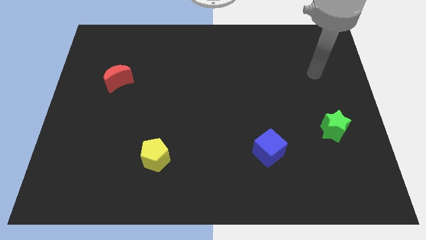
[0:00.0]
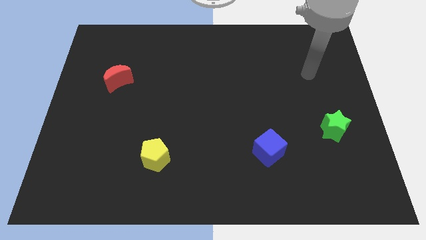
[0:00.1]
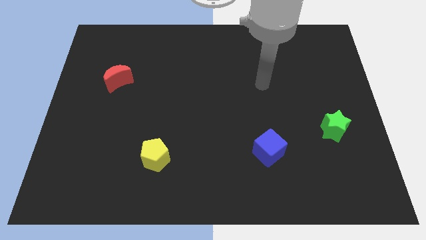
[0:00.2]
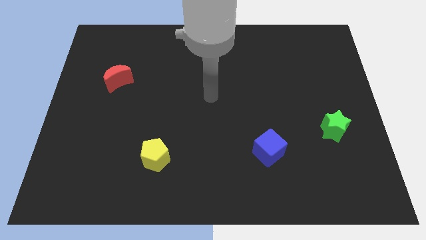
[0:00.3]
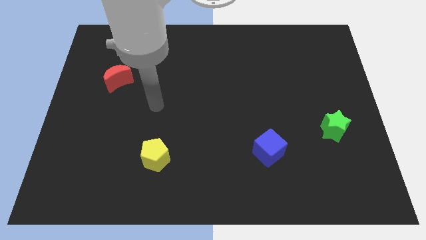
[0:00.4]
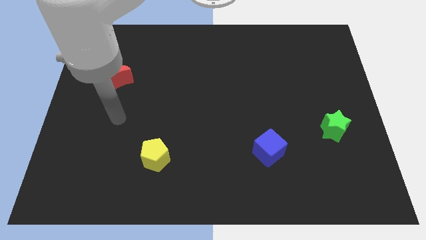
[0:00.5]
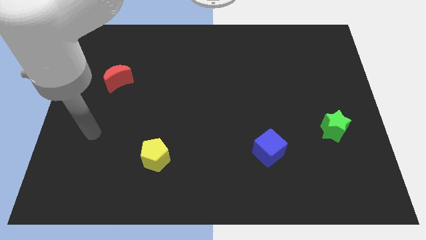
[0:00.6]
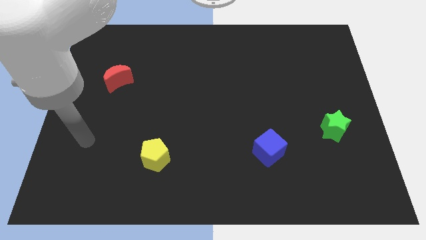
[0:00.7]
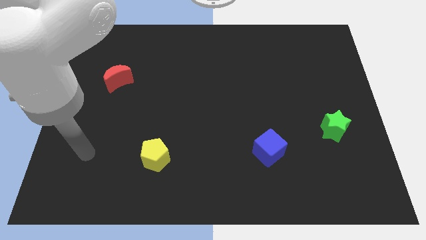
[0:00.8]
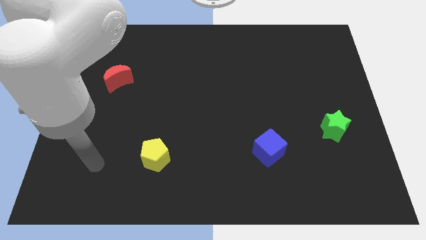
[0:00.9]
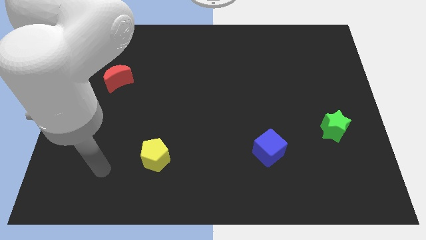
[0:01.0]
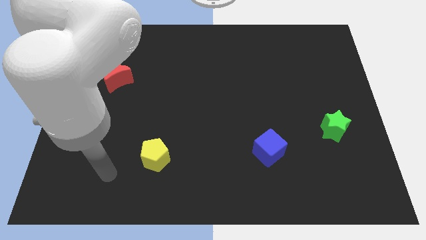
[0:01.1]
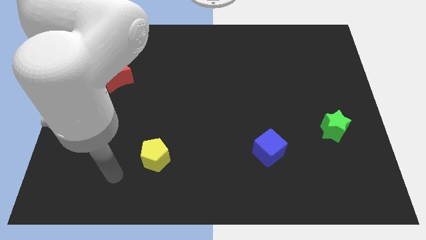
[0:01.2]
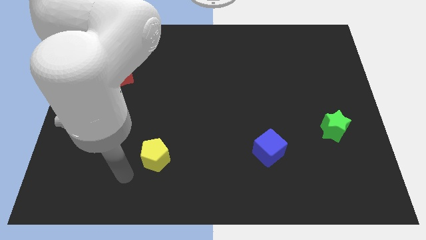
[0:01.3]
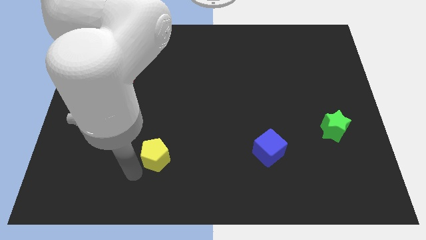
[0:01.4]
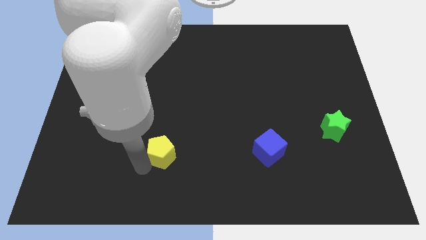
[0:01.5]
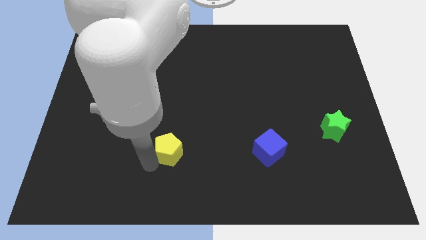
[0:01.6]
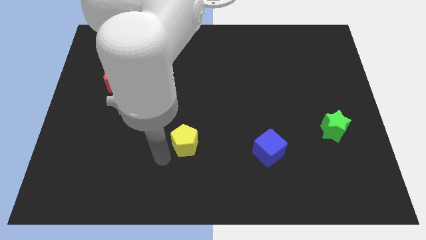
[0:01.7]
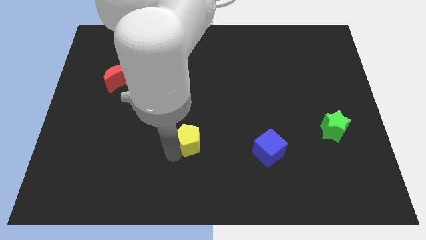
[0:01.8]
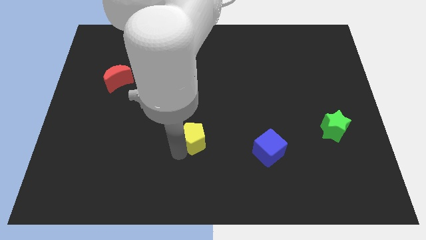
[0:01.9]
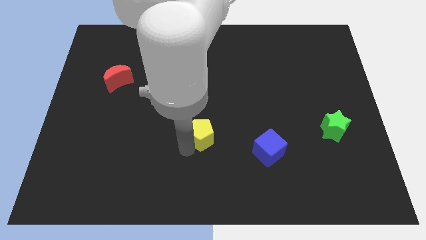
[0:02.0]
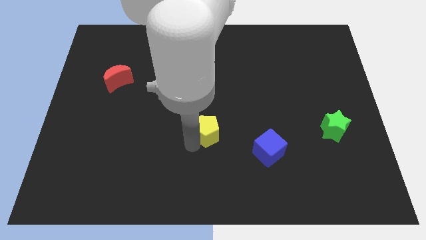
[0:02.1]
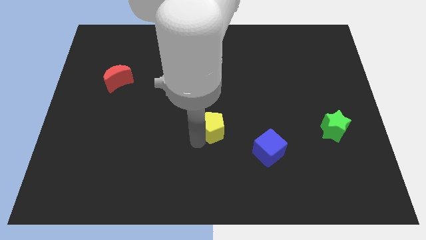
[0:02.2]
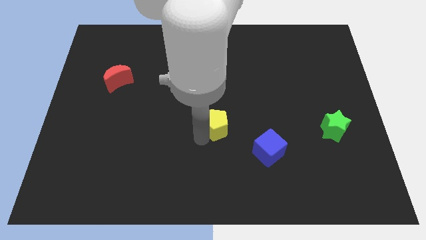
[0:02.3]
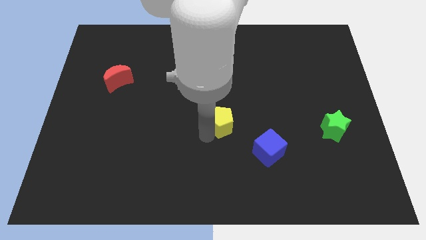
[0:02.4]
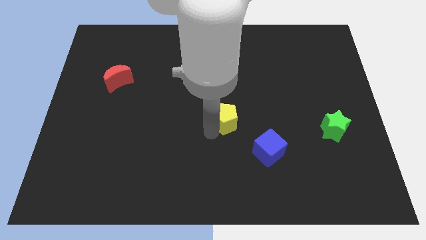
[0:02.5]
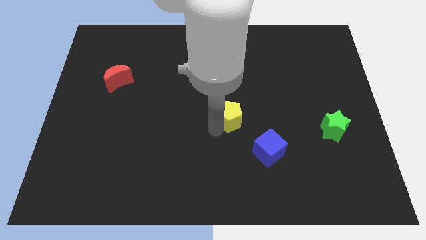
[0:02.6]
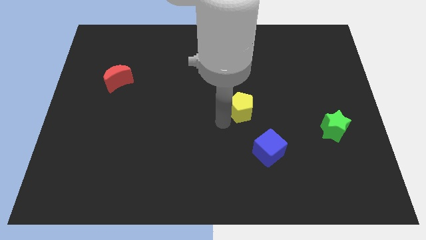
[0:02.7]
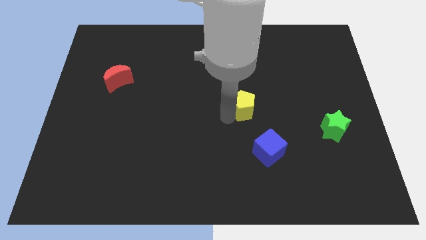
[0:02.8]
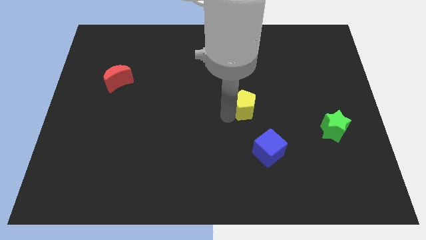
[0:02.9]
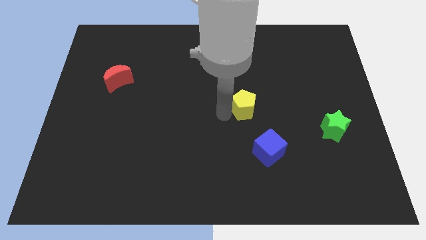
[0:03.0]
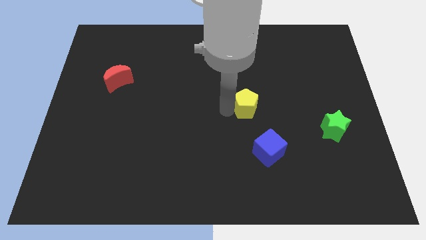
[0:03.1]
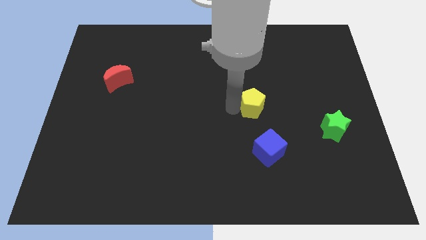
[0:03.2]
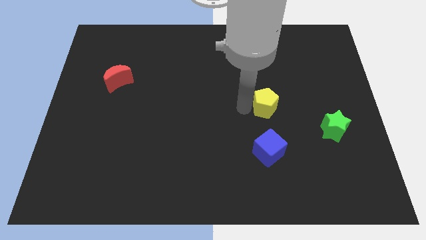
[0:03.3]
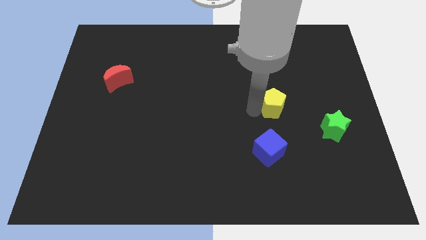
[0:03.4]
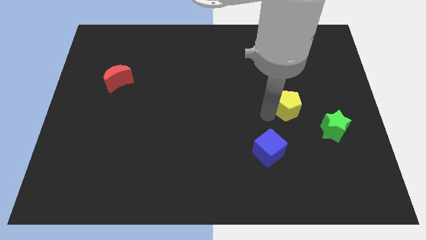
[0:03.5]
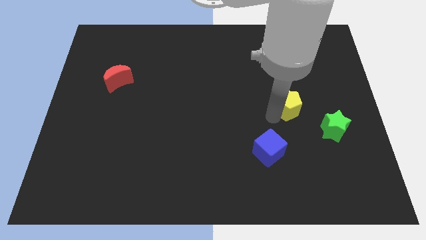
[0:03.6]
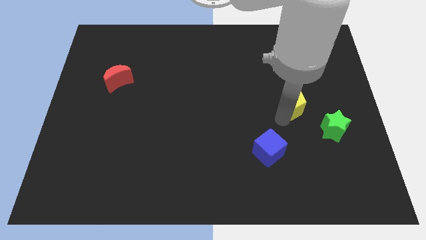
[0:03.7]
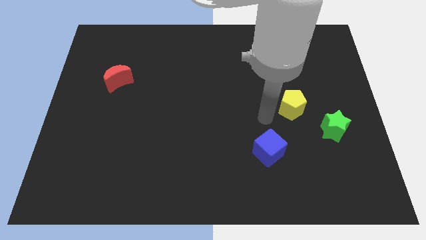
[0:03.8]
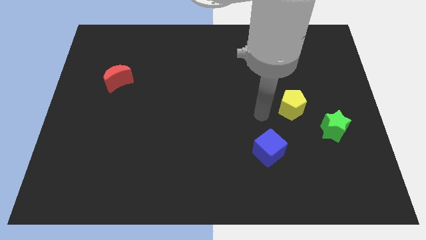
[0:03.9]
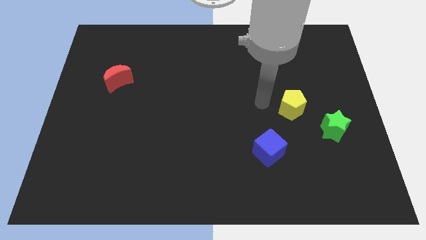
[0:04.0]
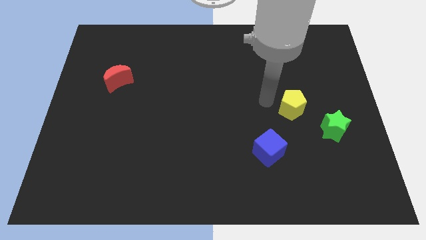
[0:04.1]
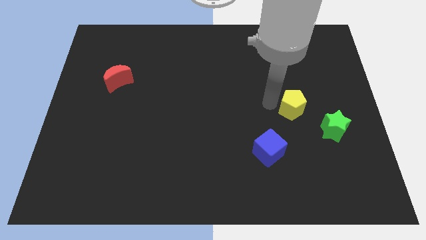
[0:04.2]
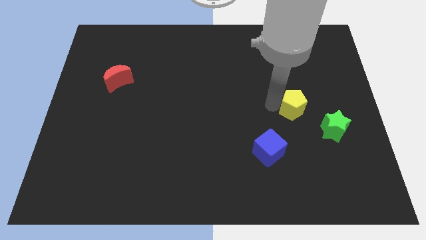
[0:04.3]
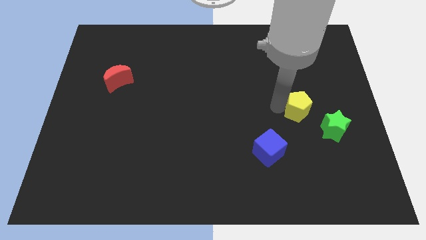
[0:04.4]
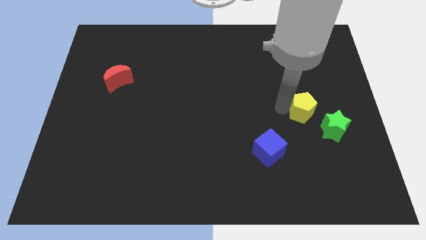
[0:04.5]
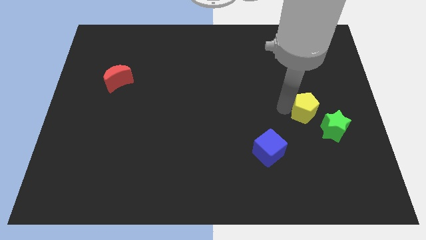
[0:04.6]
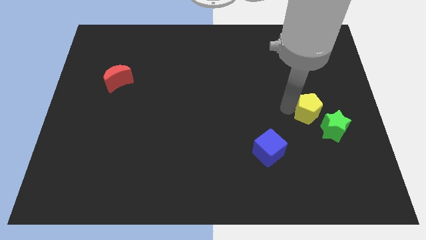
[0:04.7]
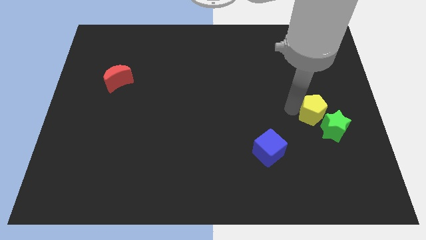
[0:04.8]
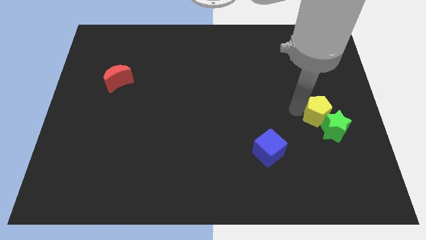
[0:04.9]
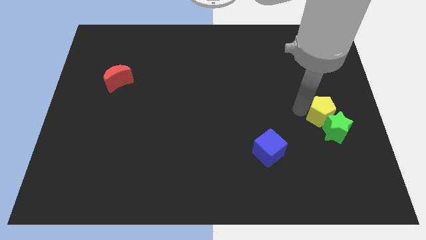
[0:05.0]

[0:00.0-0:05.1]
put the yellow pentagon towards the star

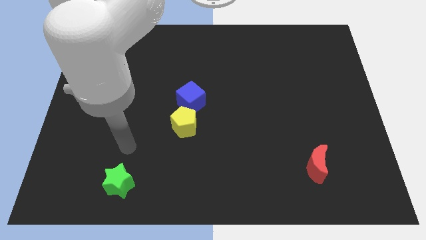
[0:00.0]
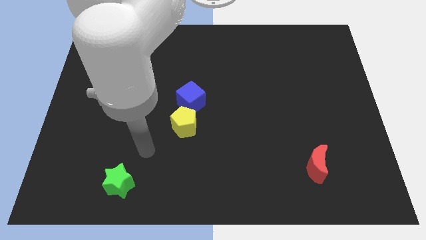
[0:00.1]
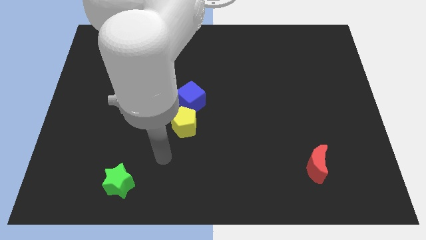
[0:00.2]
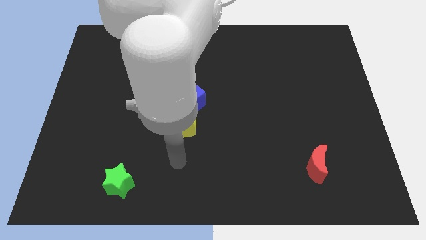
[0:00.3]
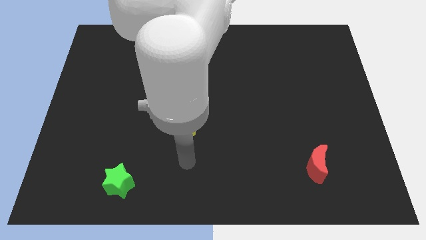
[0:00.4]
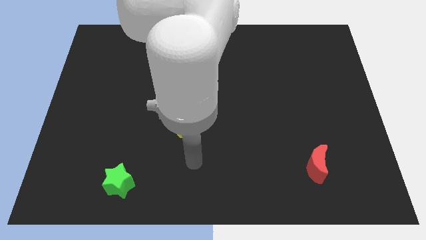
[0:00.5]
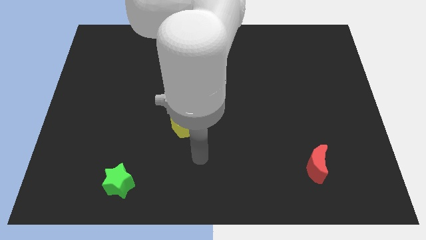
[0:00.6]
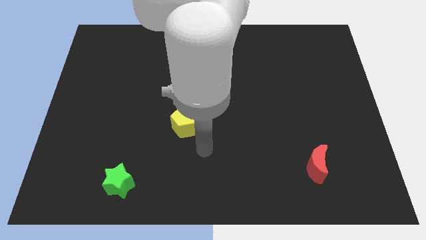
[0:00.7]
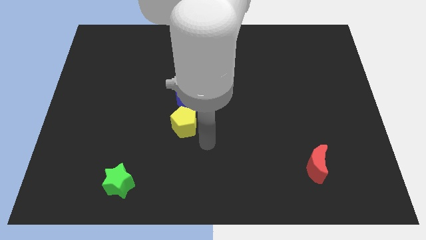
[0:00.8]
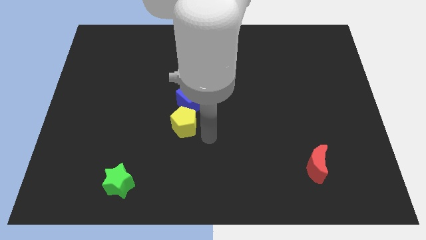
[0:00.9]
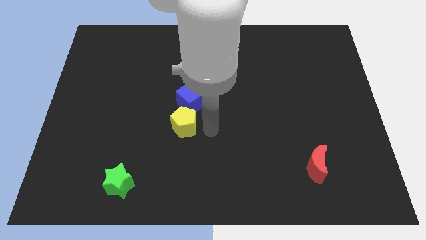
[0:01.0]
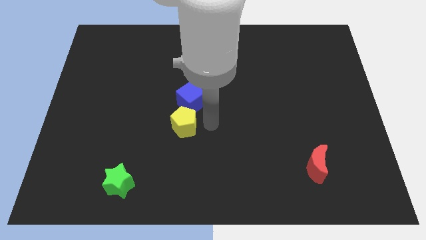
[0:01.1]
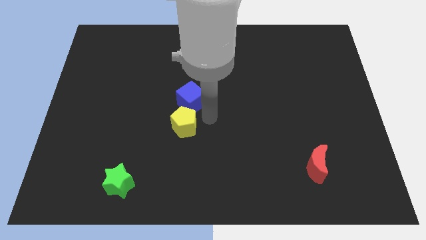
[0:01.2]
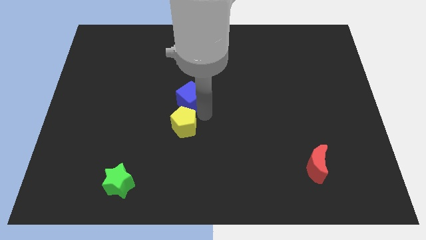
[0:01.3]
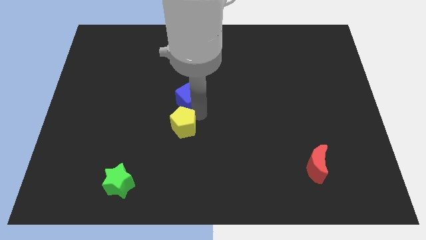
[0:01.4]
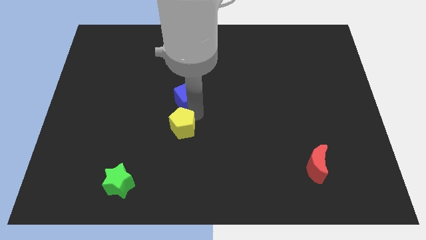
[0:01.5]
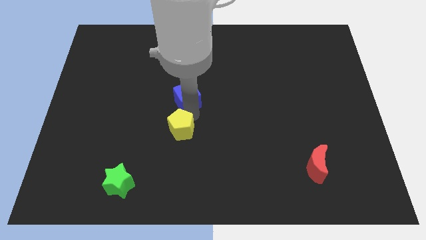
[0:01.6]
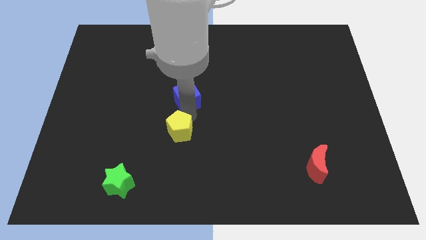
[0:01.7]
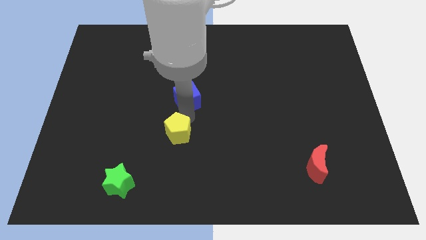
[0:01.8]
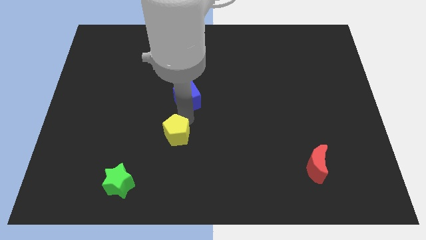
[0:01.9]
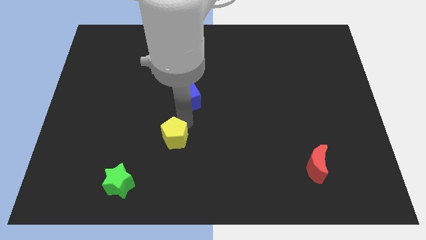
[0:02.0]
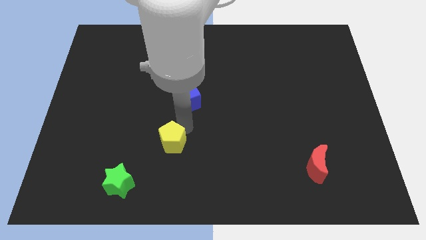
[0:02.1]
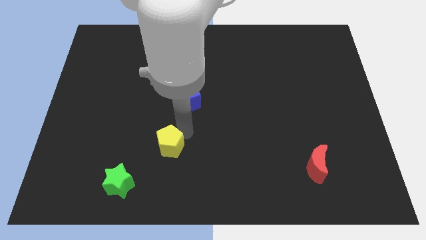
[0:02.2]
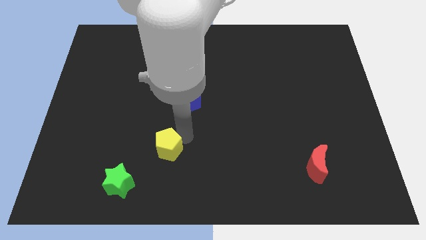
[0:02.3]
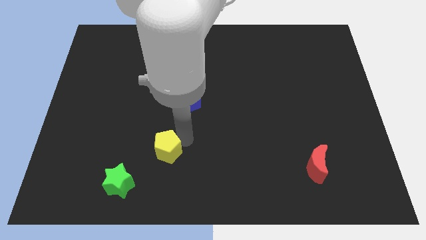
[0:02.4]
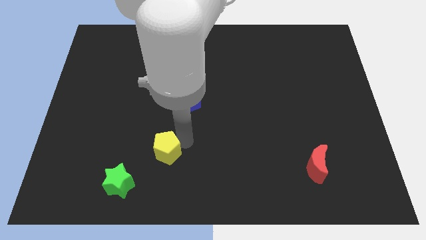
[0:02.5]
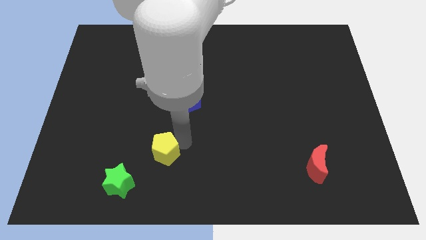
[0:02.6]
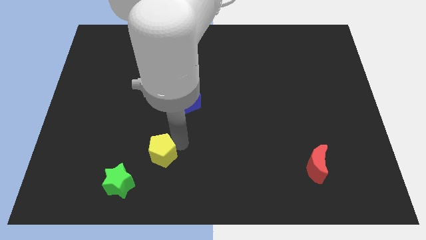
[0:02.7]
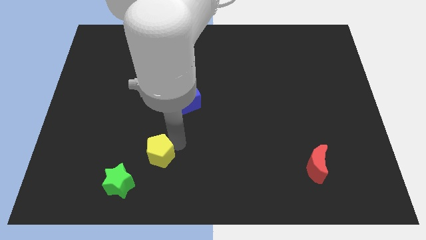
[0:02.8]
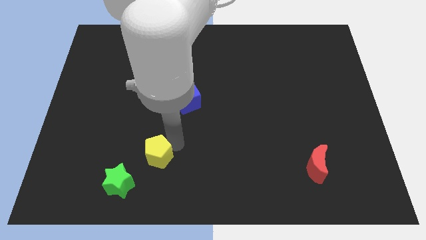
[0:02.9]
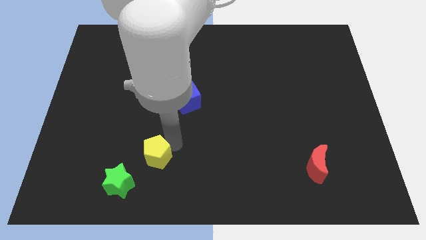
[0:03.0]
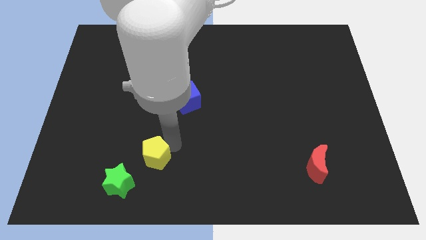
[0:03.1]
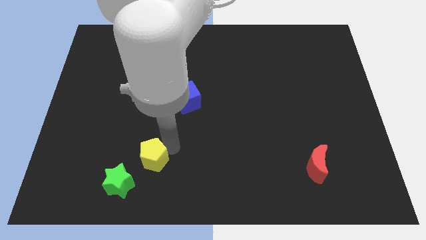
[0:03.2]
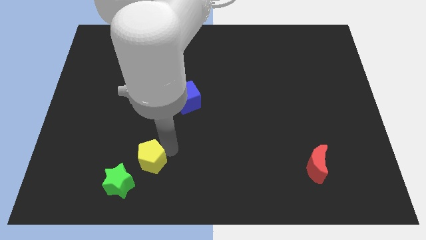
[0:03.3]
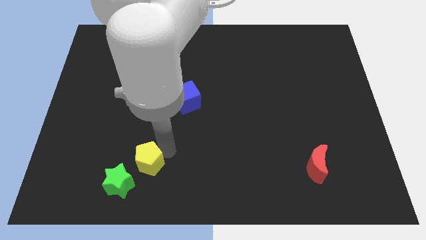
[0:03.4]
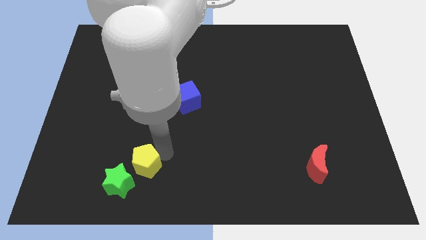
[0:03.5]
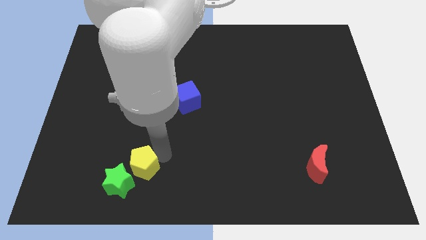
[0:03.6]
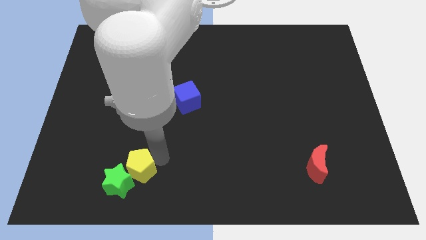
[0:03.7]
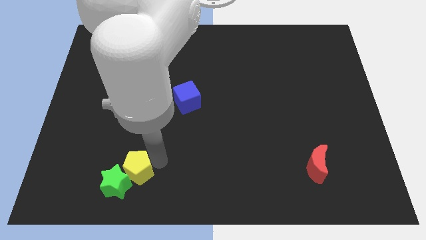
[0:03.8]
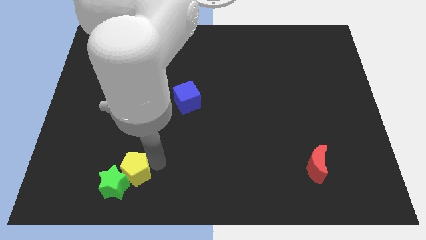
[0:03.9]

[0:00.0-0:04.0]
put the yellow block to the green block
